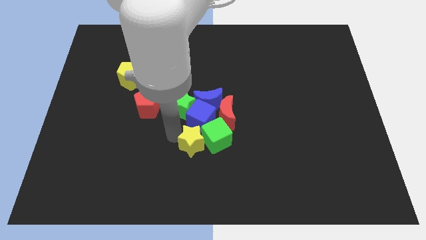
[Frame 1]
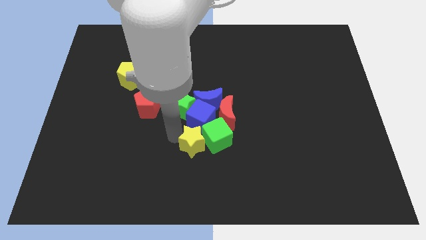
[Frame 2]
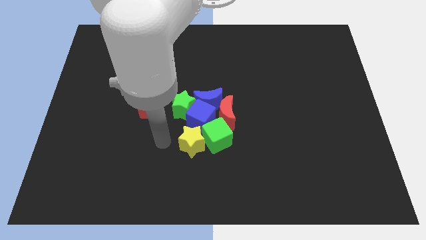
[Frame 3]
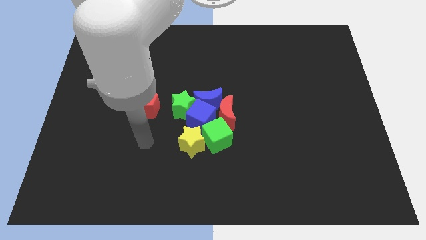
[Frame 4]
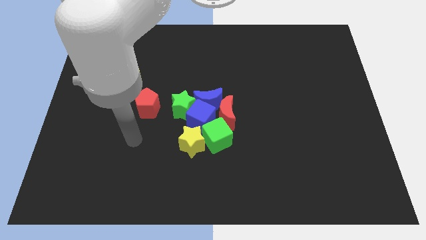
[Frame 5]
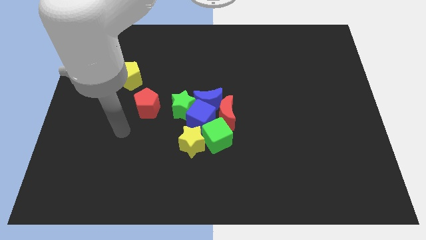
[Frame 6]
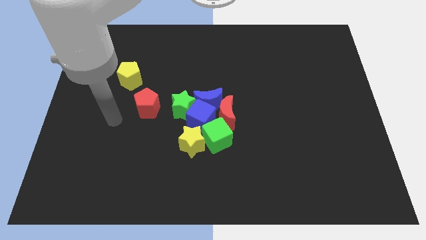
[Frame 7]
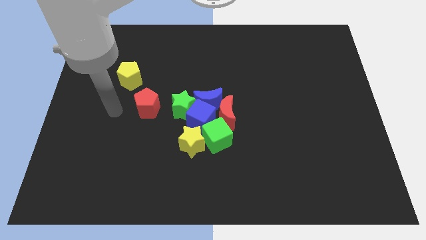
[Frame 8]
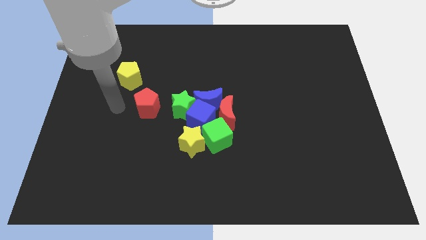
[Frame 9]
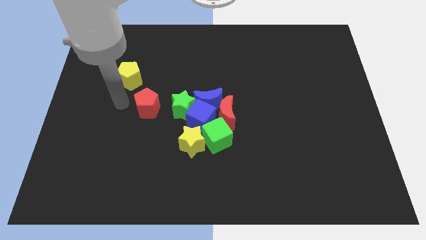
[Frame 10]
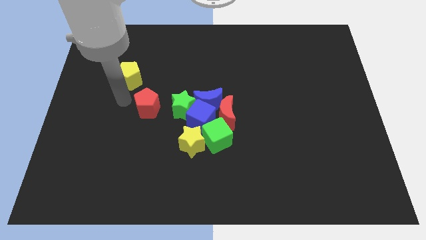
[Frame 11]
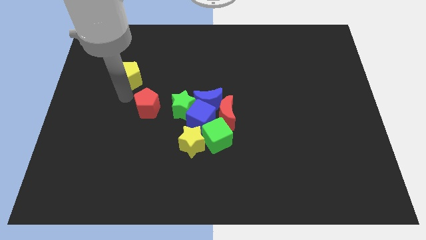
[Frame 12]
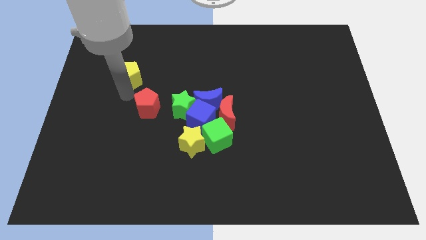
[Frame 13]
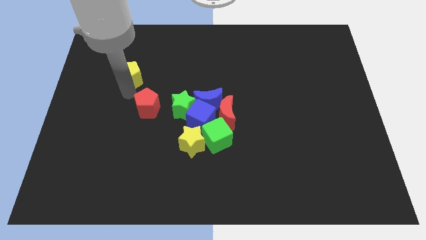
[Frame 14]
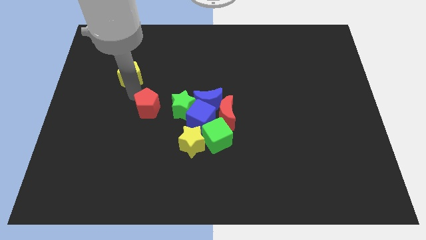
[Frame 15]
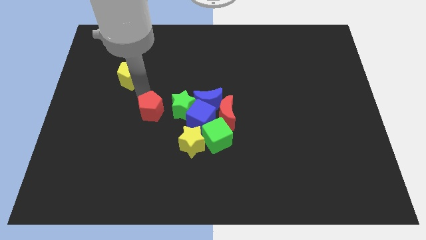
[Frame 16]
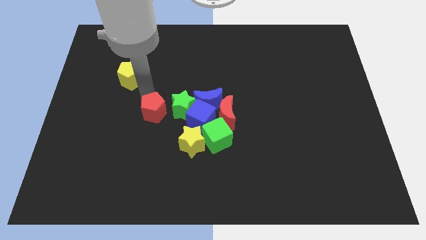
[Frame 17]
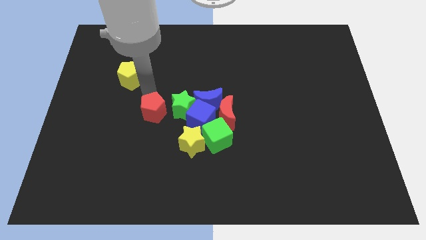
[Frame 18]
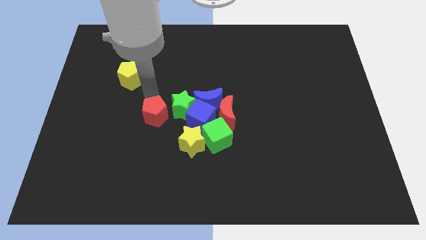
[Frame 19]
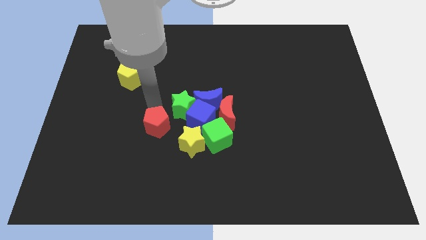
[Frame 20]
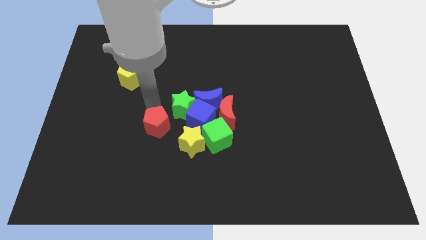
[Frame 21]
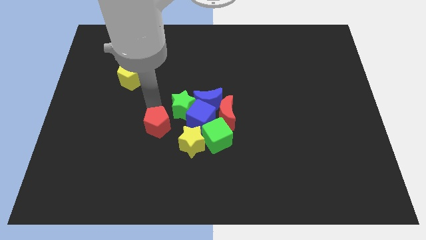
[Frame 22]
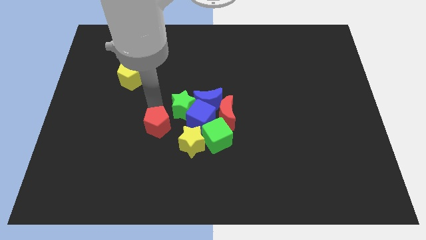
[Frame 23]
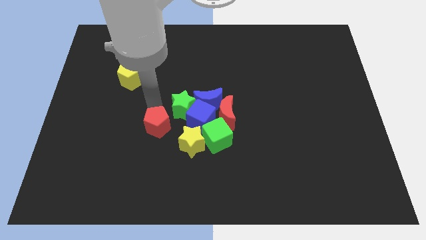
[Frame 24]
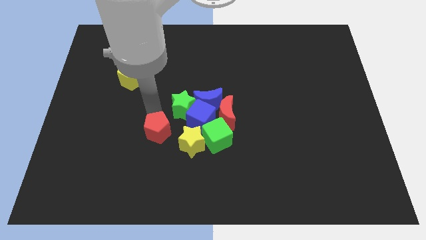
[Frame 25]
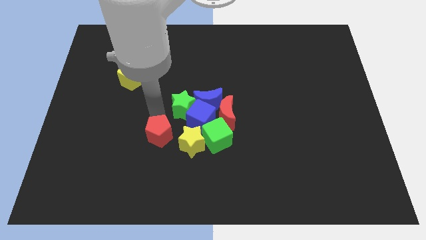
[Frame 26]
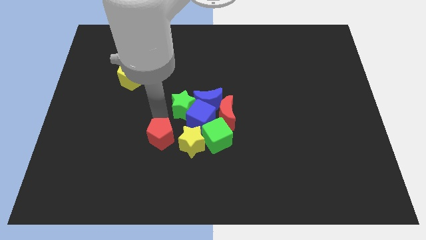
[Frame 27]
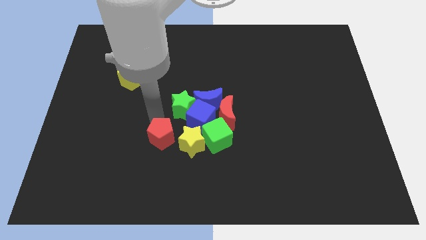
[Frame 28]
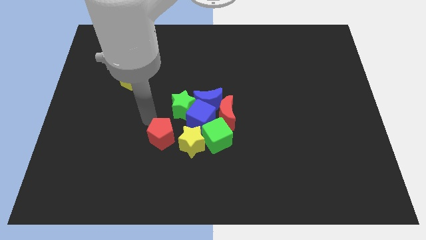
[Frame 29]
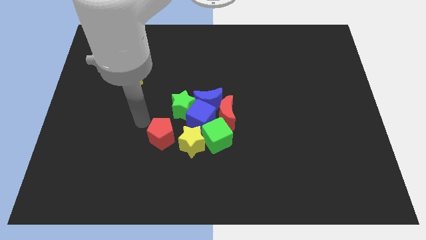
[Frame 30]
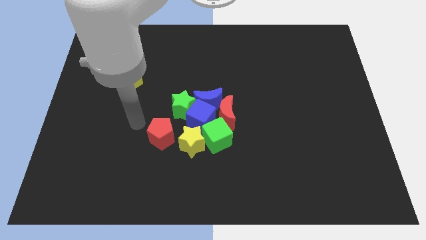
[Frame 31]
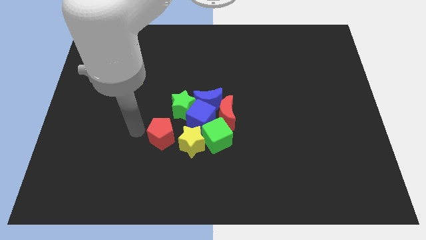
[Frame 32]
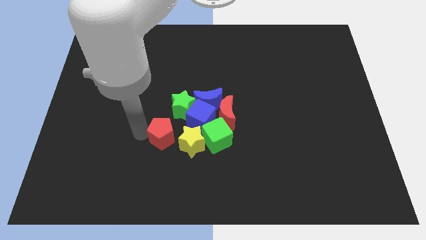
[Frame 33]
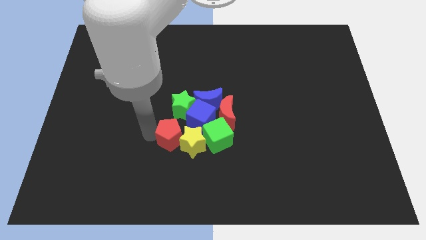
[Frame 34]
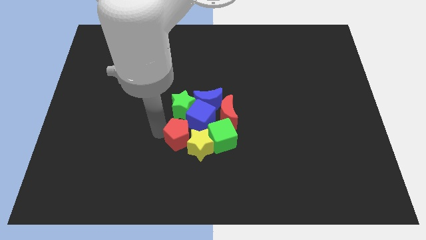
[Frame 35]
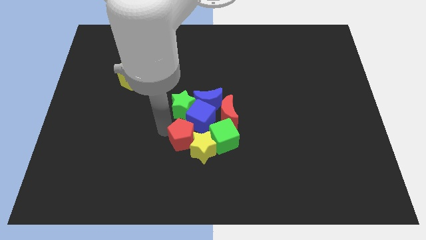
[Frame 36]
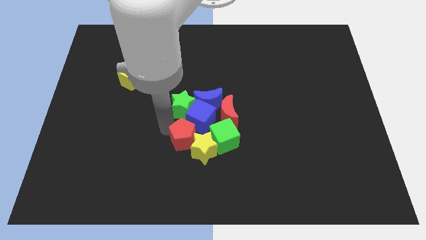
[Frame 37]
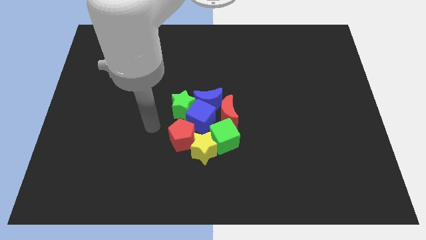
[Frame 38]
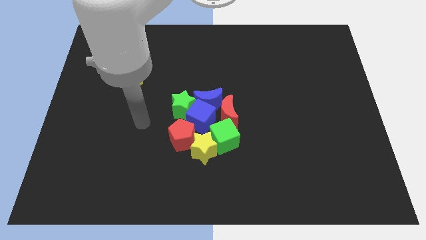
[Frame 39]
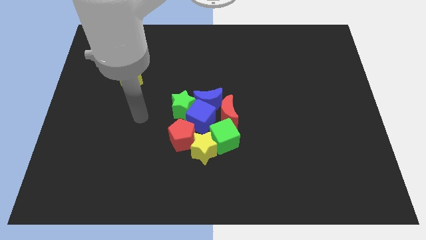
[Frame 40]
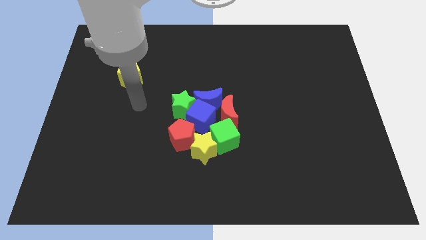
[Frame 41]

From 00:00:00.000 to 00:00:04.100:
push the red pentagon into the group of blocks

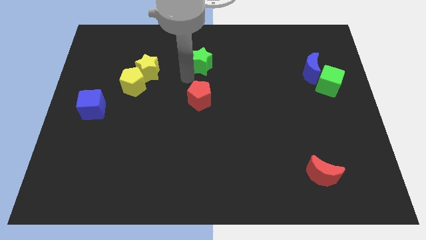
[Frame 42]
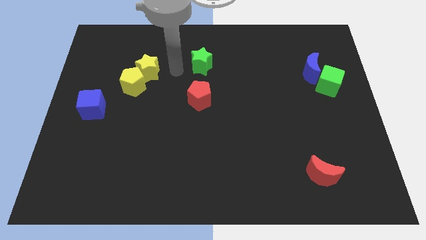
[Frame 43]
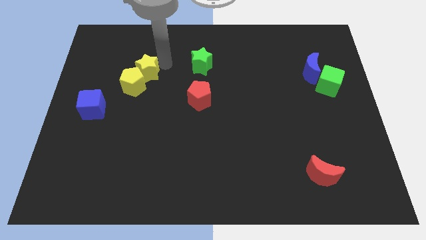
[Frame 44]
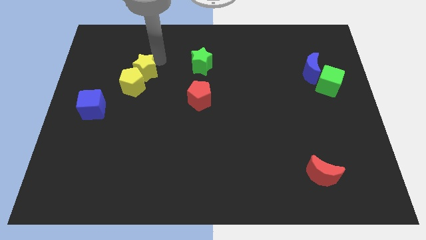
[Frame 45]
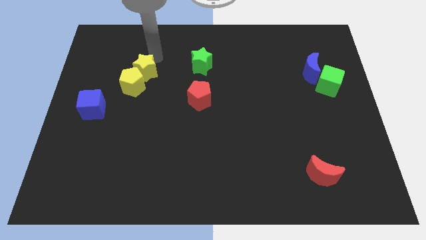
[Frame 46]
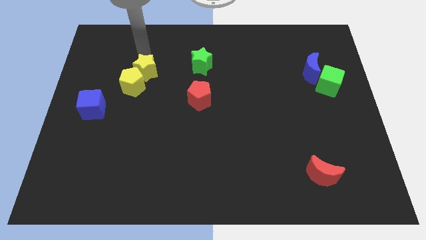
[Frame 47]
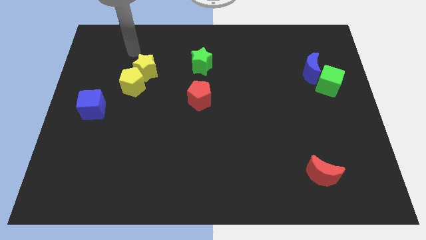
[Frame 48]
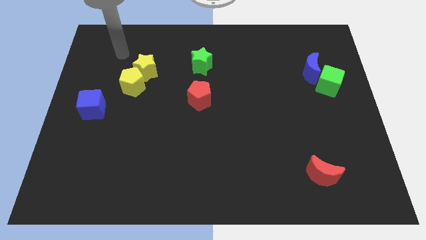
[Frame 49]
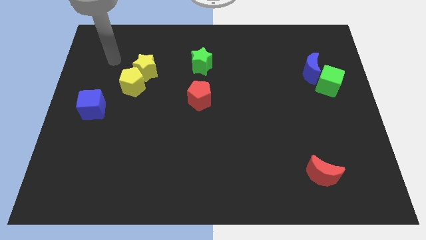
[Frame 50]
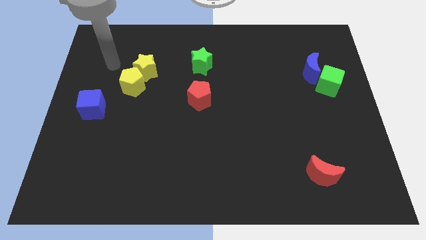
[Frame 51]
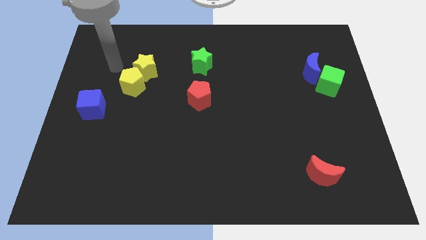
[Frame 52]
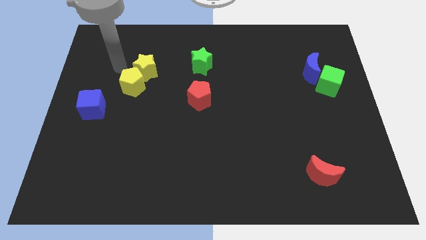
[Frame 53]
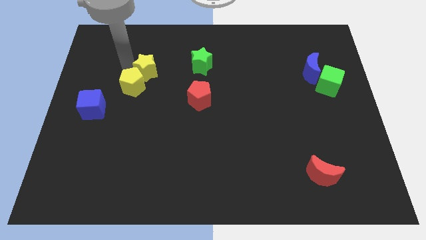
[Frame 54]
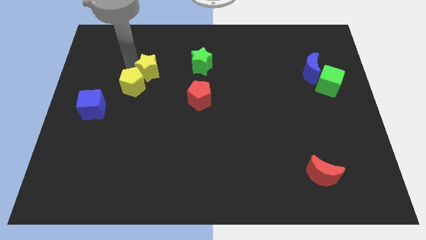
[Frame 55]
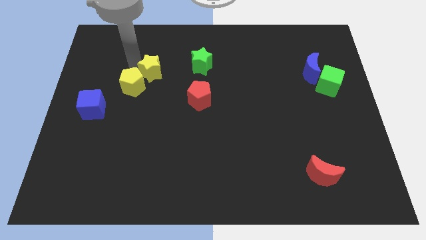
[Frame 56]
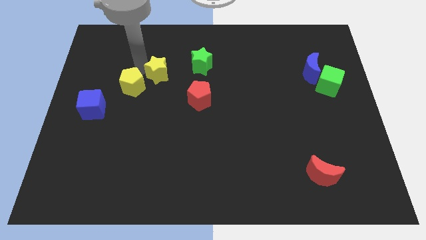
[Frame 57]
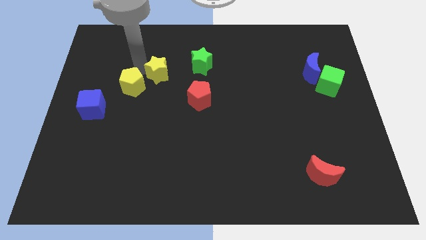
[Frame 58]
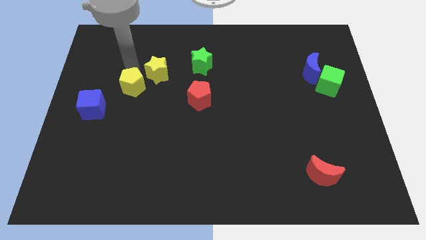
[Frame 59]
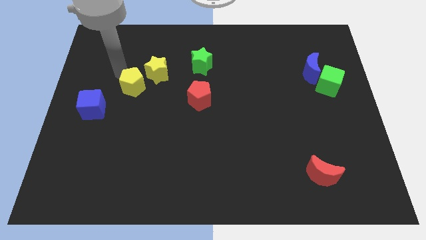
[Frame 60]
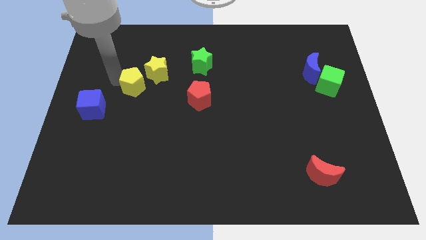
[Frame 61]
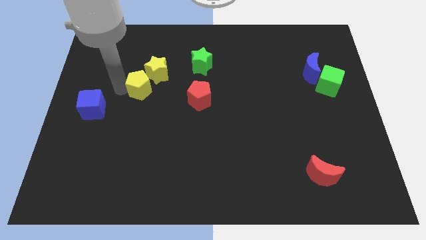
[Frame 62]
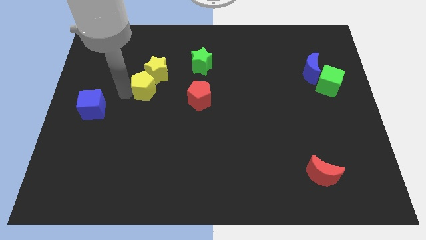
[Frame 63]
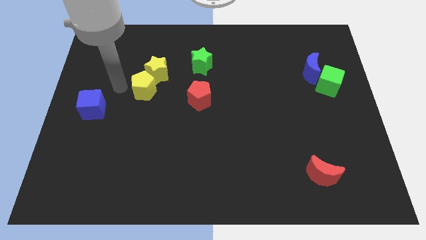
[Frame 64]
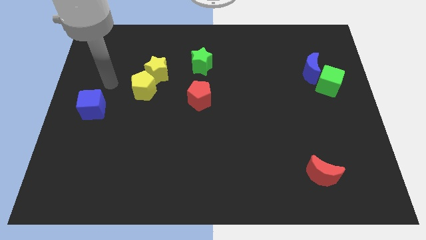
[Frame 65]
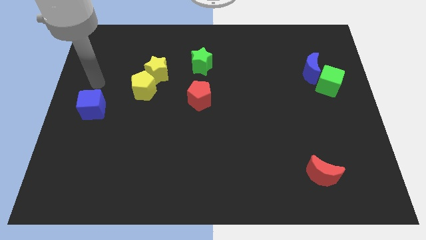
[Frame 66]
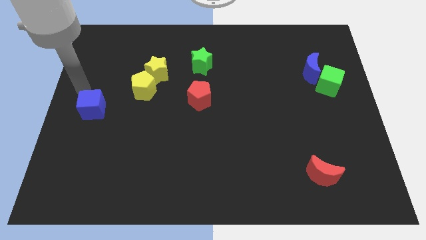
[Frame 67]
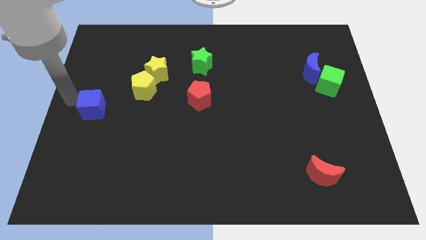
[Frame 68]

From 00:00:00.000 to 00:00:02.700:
move the yellow blocks to the right of the board

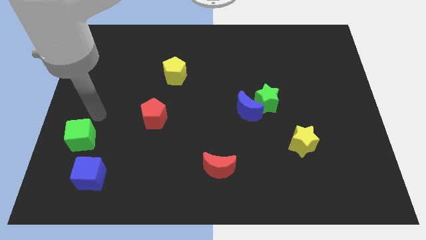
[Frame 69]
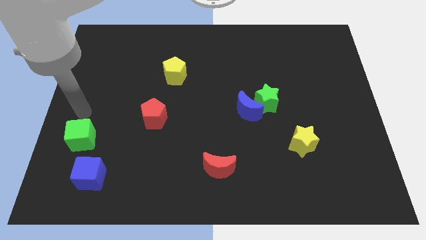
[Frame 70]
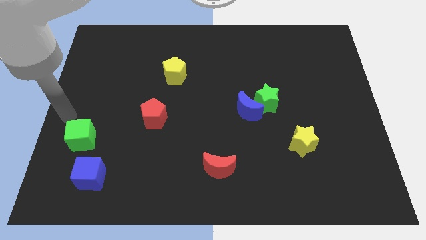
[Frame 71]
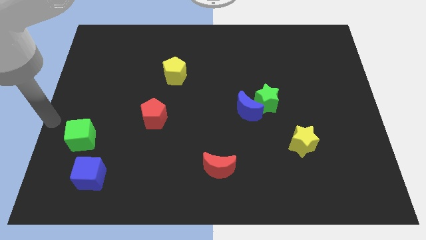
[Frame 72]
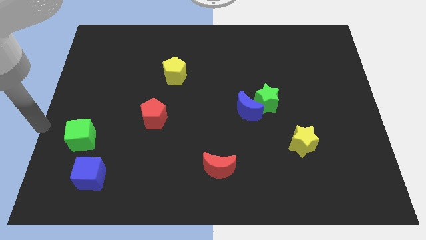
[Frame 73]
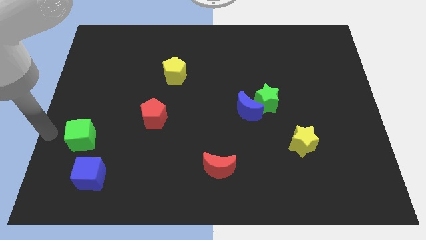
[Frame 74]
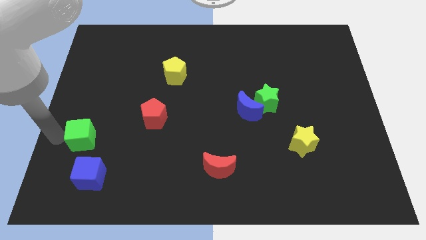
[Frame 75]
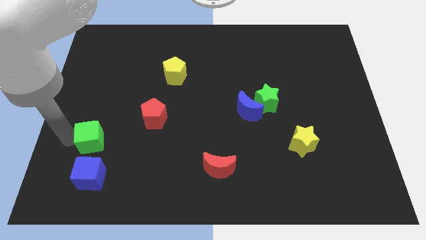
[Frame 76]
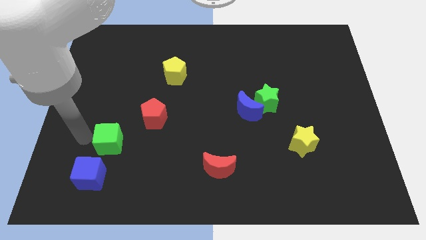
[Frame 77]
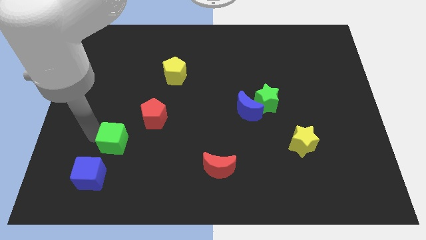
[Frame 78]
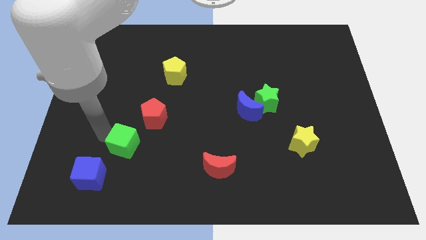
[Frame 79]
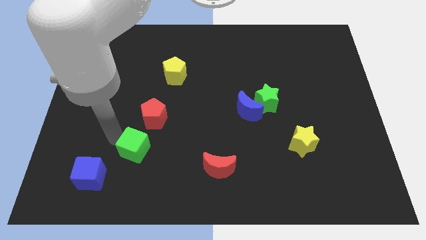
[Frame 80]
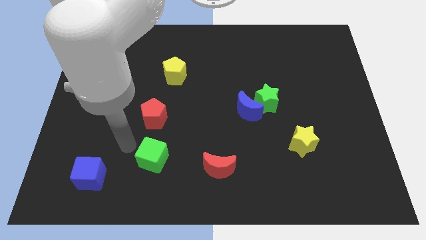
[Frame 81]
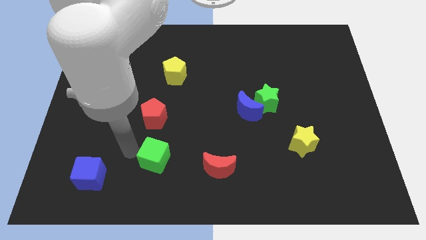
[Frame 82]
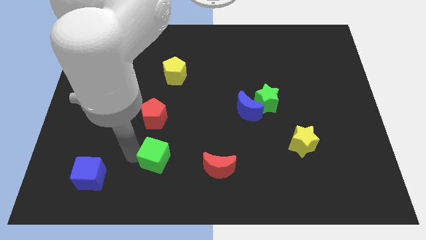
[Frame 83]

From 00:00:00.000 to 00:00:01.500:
slide the green cube slightly to the right

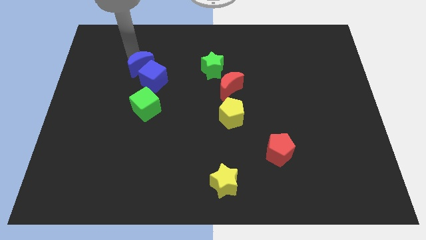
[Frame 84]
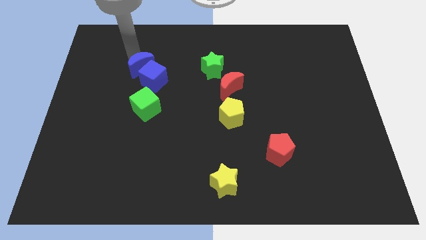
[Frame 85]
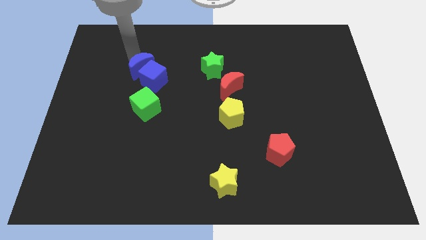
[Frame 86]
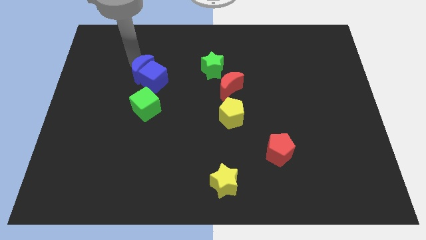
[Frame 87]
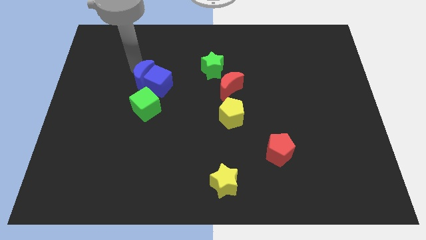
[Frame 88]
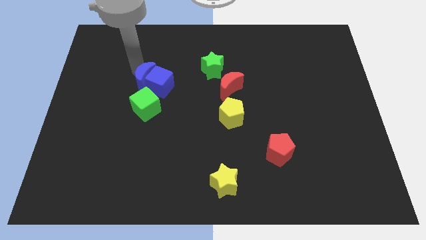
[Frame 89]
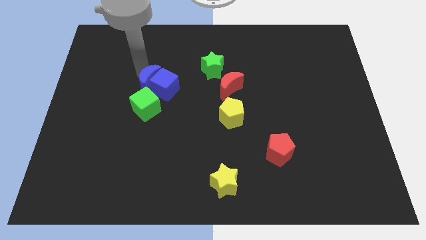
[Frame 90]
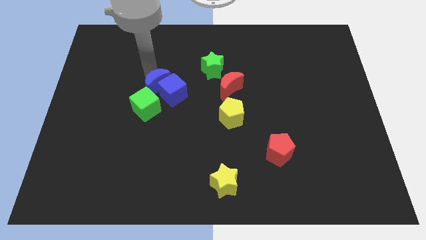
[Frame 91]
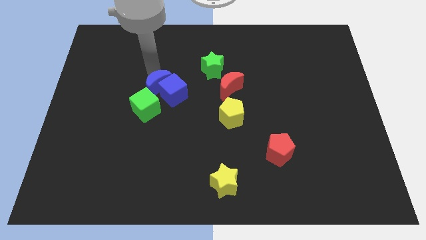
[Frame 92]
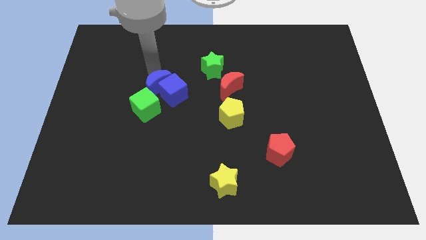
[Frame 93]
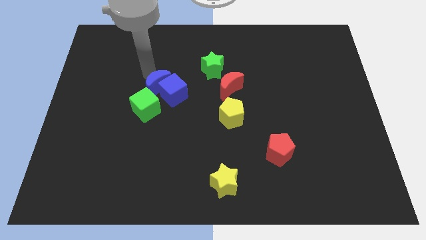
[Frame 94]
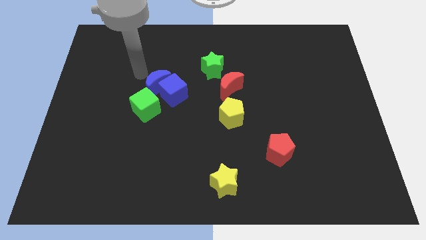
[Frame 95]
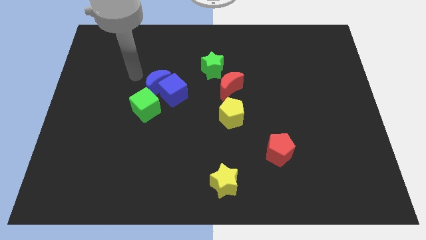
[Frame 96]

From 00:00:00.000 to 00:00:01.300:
move the blue blocks to the top right of the green cube
